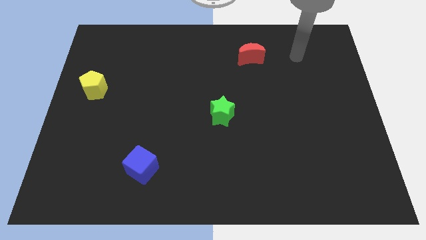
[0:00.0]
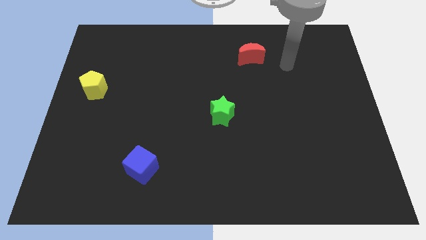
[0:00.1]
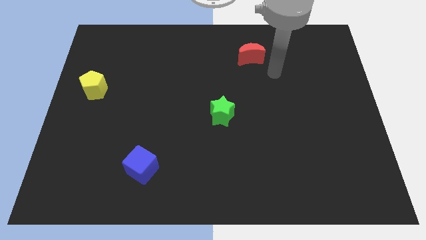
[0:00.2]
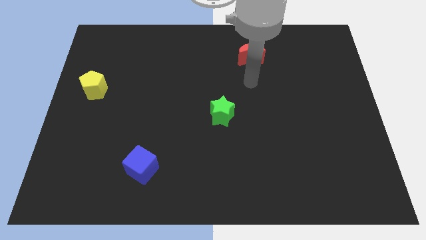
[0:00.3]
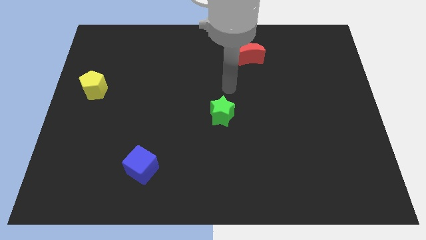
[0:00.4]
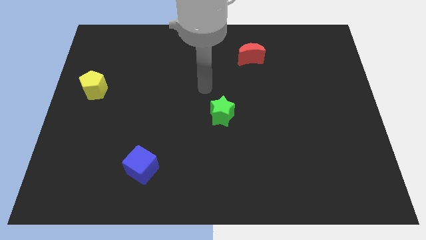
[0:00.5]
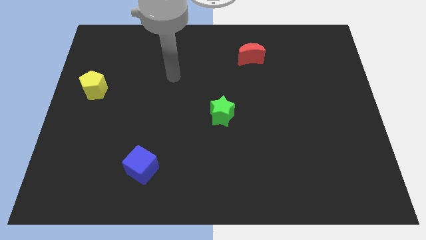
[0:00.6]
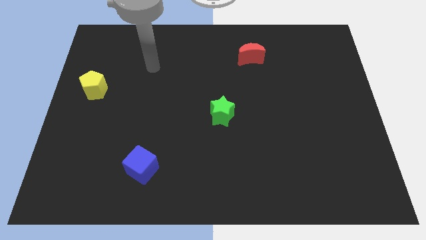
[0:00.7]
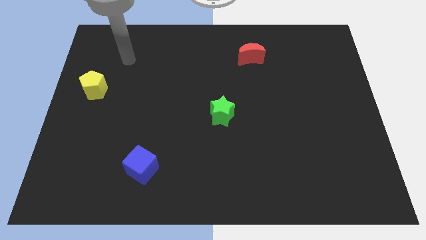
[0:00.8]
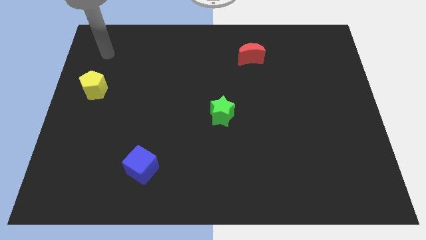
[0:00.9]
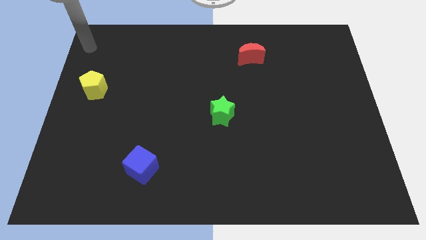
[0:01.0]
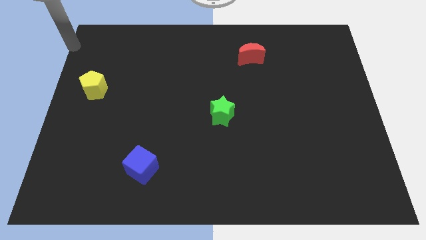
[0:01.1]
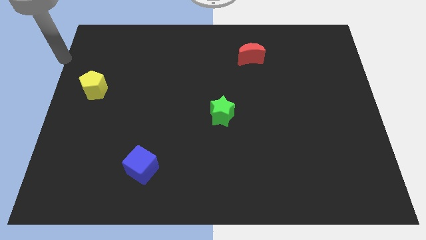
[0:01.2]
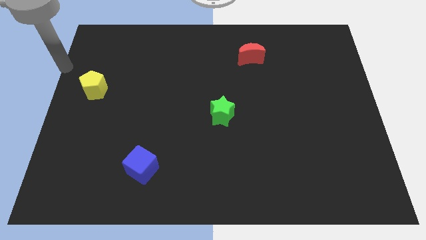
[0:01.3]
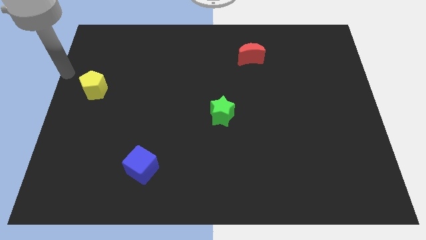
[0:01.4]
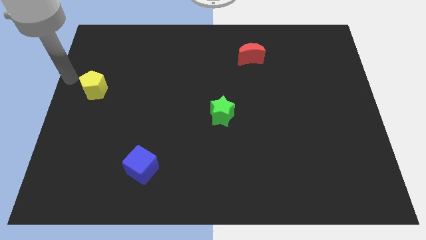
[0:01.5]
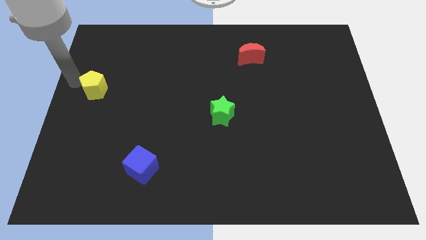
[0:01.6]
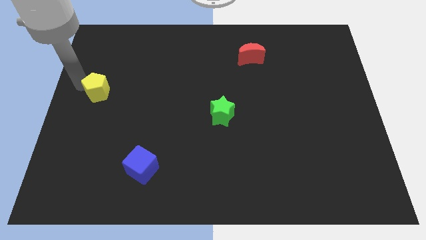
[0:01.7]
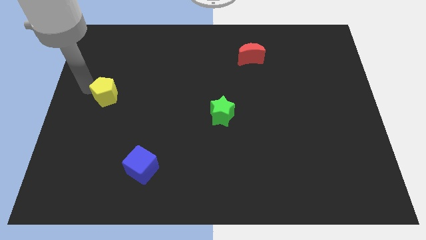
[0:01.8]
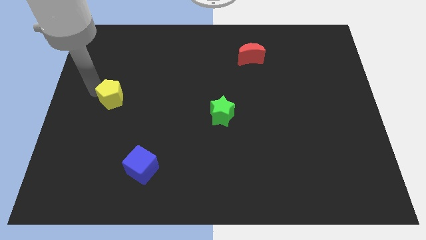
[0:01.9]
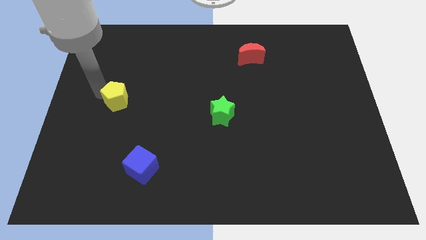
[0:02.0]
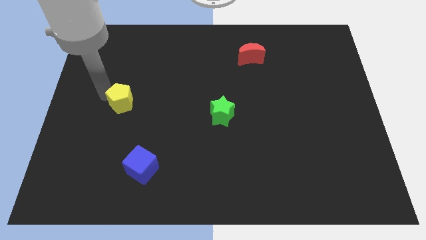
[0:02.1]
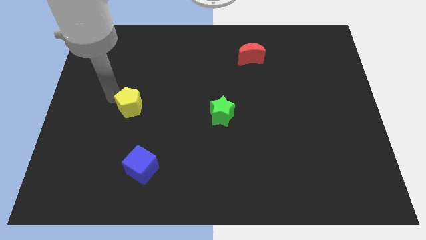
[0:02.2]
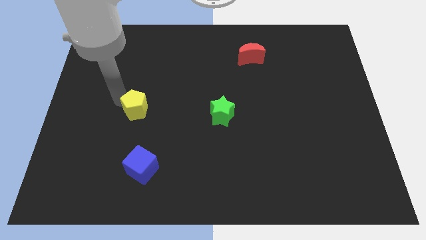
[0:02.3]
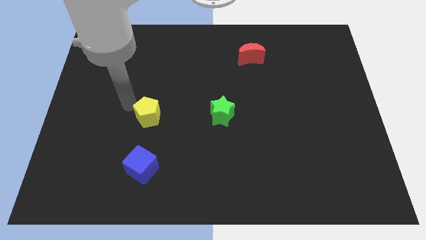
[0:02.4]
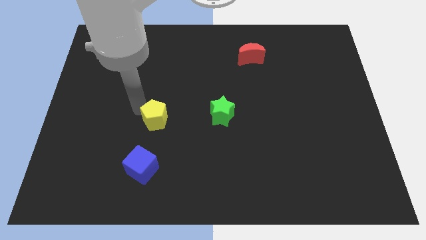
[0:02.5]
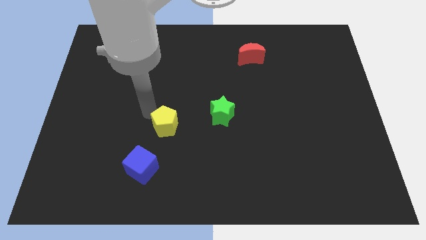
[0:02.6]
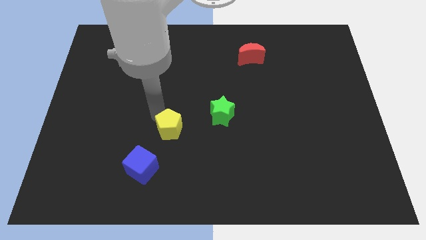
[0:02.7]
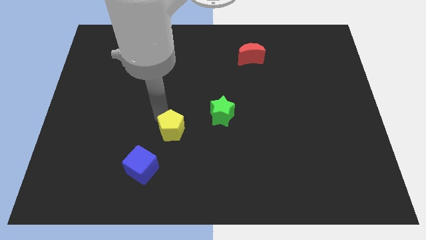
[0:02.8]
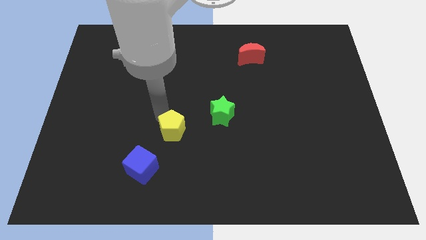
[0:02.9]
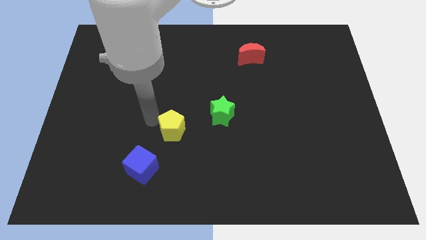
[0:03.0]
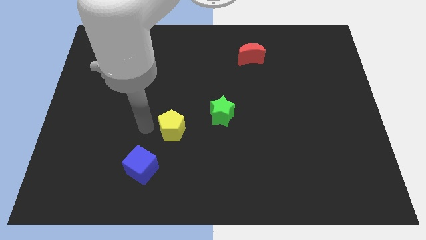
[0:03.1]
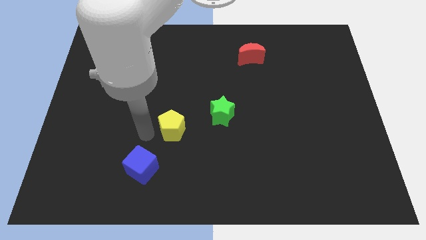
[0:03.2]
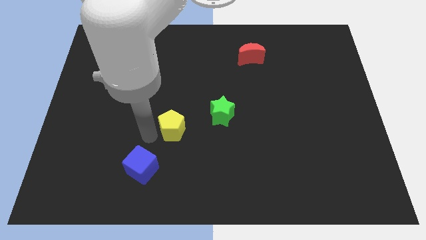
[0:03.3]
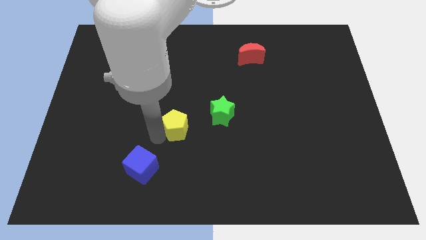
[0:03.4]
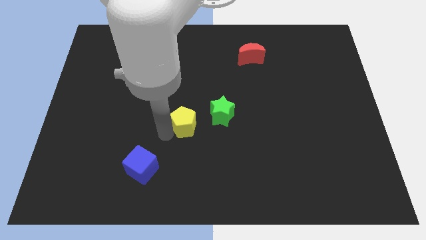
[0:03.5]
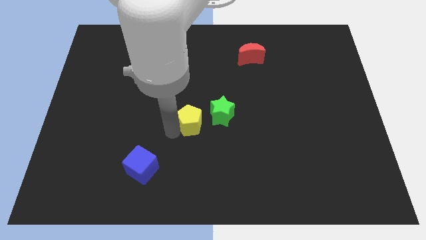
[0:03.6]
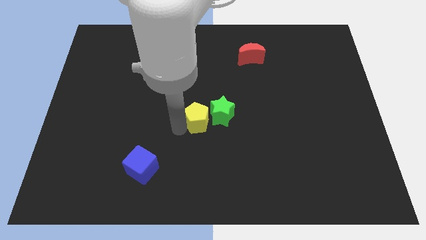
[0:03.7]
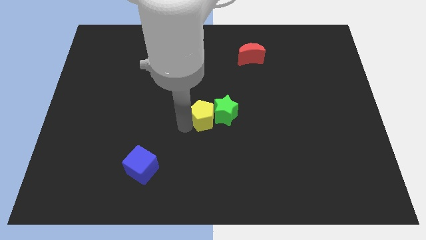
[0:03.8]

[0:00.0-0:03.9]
put the yellow block next to the green block

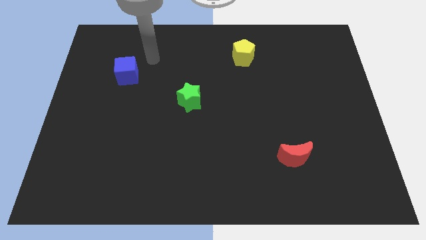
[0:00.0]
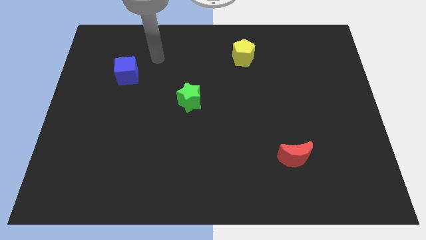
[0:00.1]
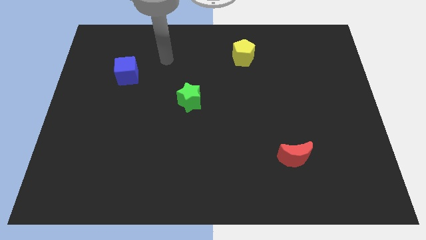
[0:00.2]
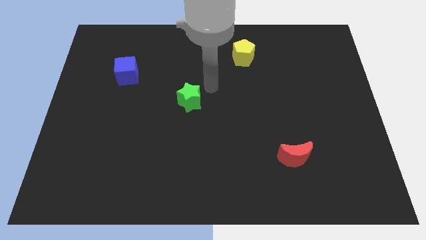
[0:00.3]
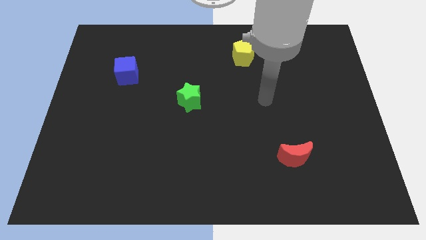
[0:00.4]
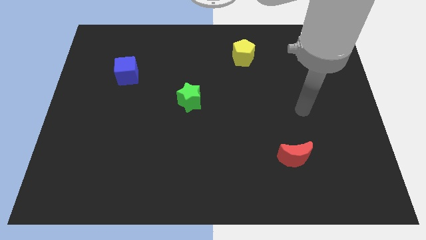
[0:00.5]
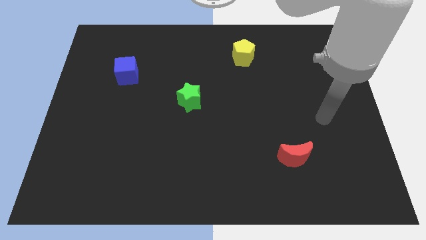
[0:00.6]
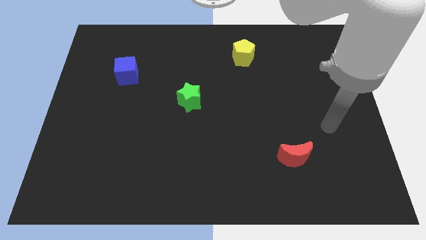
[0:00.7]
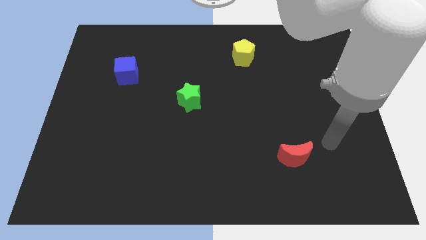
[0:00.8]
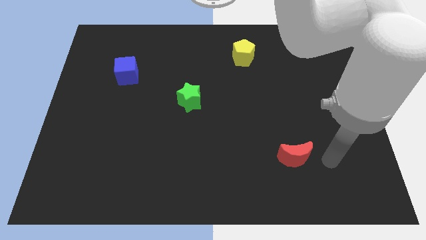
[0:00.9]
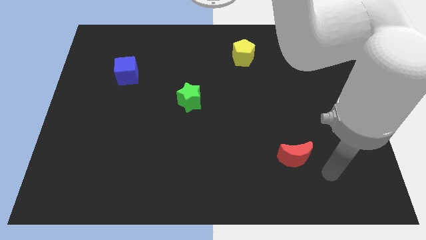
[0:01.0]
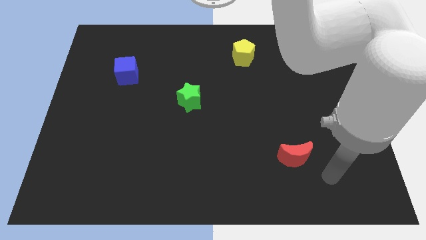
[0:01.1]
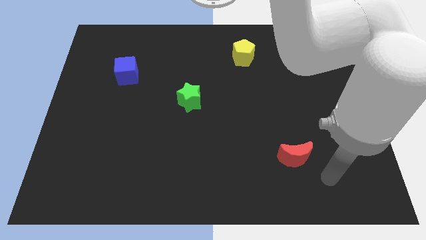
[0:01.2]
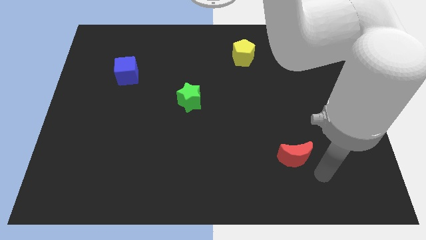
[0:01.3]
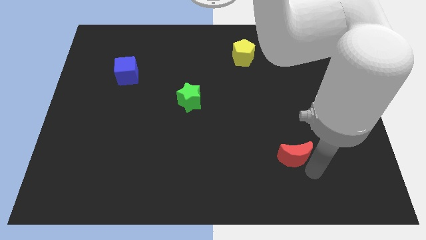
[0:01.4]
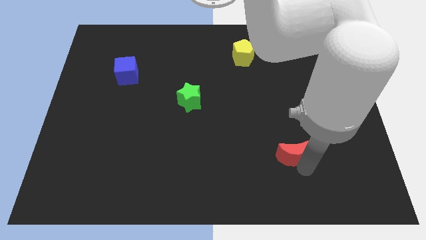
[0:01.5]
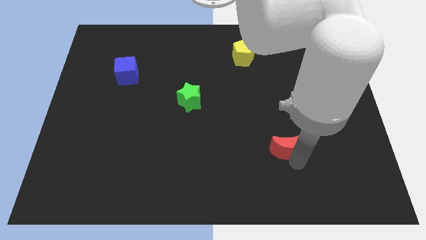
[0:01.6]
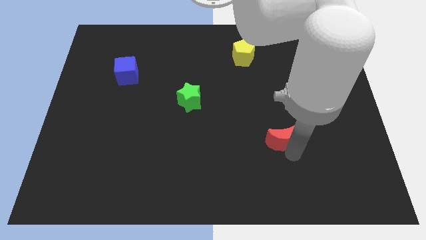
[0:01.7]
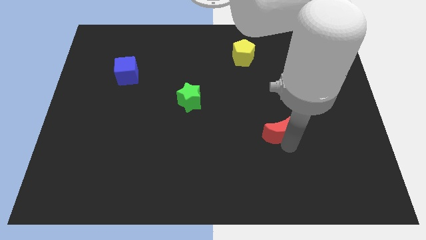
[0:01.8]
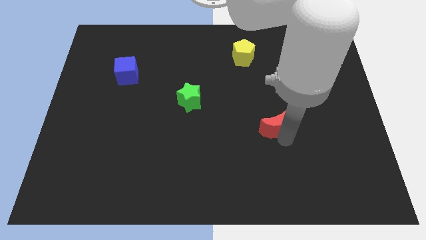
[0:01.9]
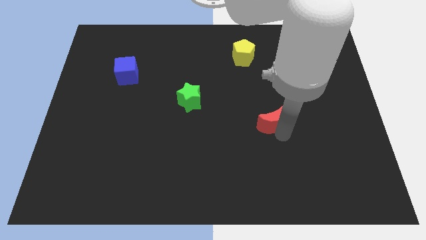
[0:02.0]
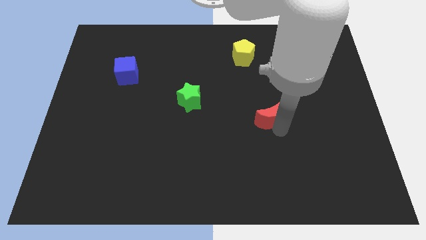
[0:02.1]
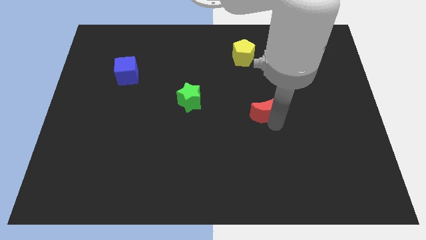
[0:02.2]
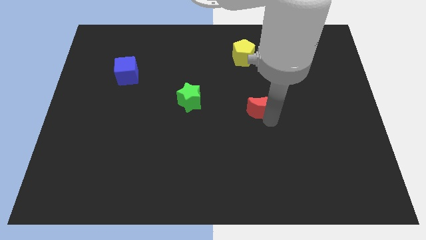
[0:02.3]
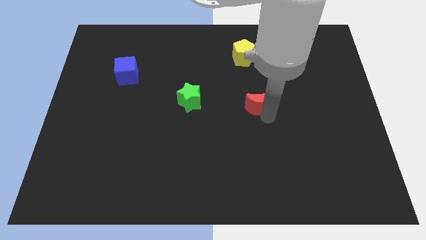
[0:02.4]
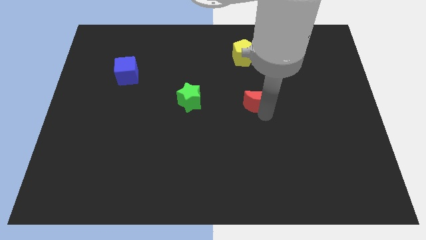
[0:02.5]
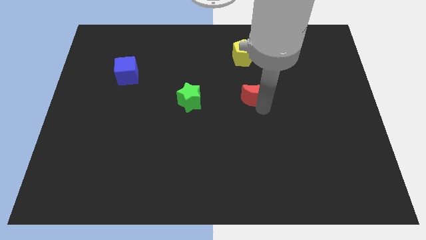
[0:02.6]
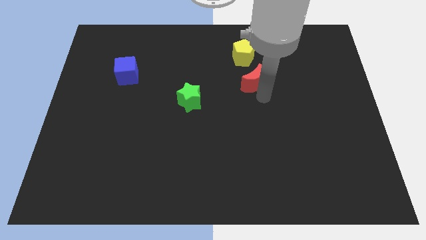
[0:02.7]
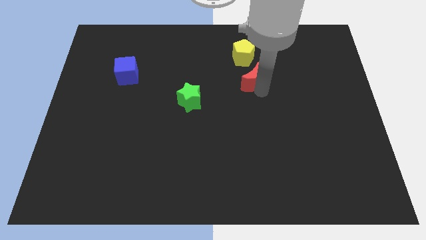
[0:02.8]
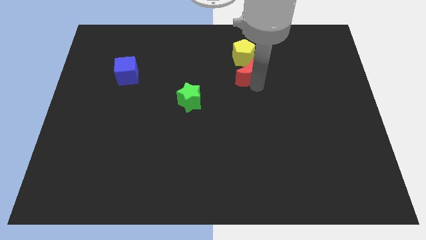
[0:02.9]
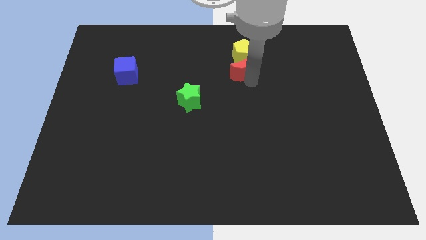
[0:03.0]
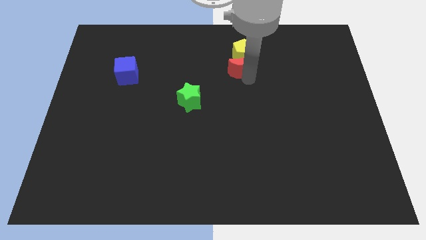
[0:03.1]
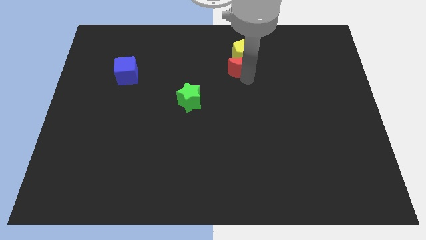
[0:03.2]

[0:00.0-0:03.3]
move the moon next to the pentagon

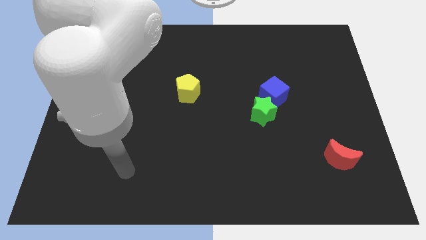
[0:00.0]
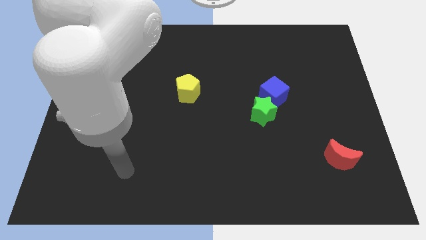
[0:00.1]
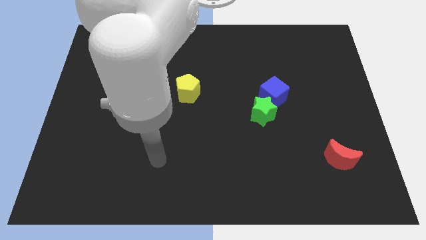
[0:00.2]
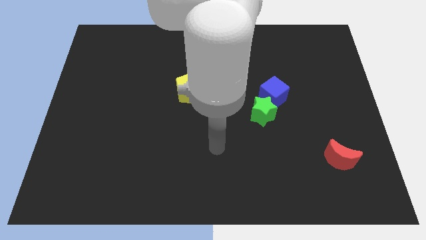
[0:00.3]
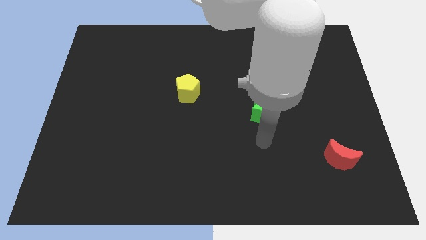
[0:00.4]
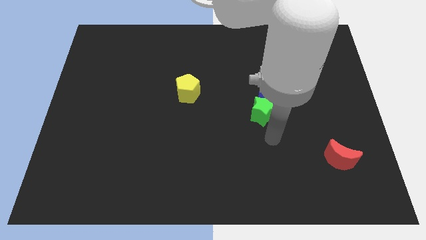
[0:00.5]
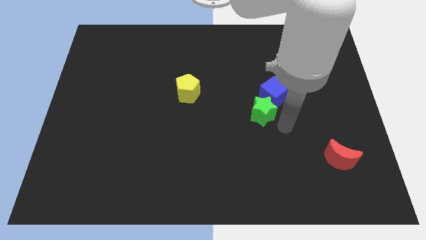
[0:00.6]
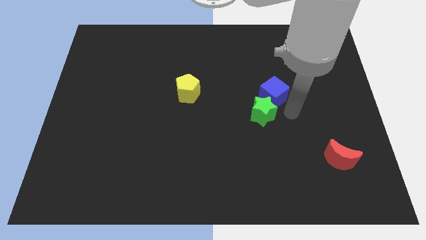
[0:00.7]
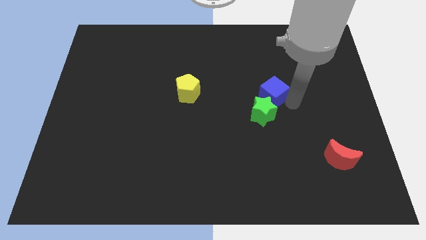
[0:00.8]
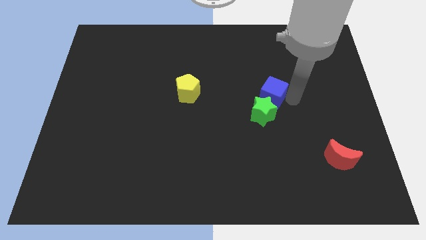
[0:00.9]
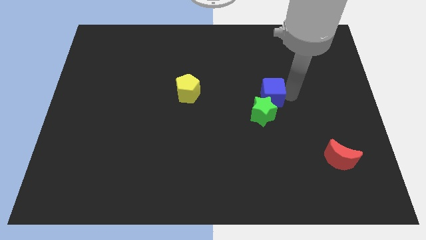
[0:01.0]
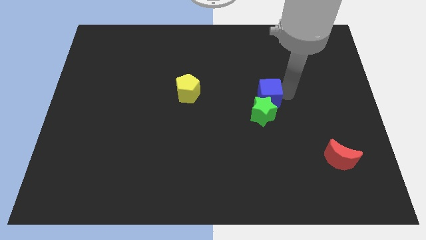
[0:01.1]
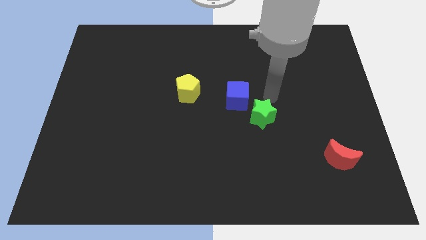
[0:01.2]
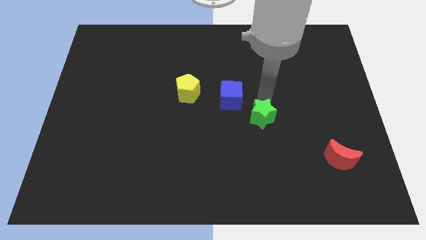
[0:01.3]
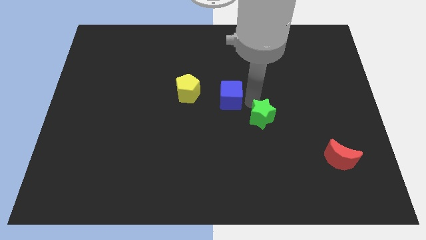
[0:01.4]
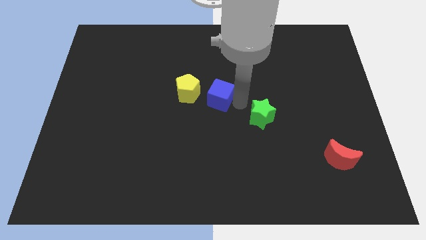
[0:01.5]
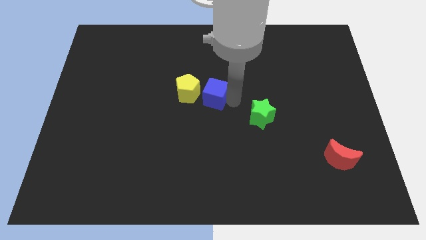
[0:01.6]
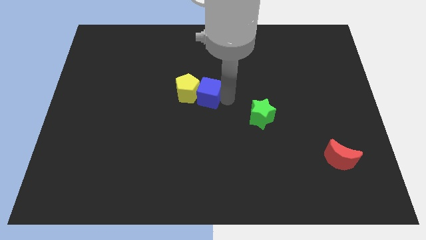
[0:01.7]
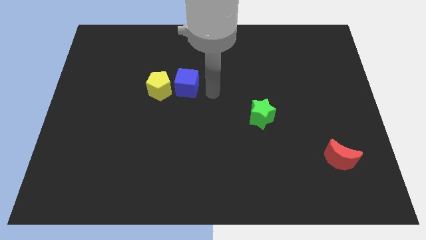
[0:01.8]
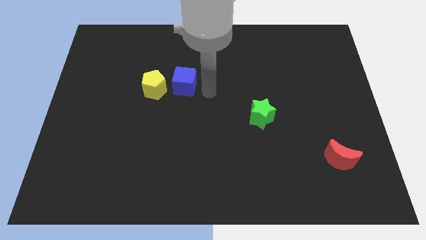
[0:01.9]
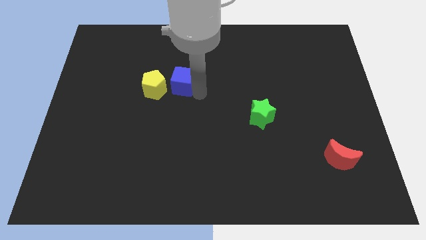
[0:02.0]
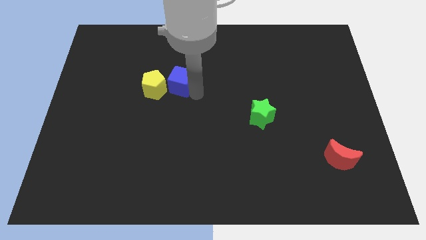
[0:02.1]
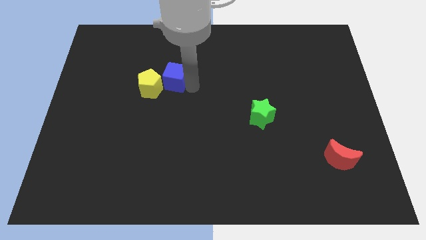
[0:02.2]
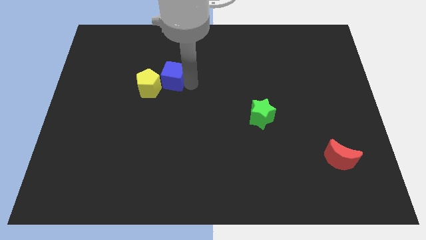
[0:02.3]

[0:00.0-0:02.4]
move the blue cube close to the yellow block
